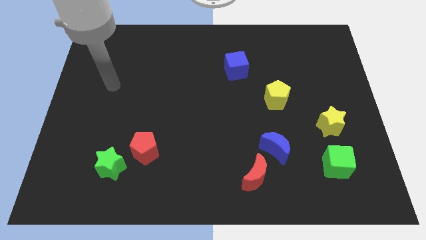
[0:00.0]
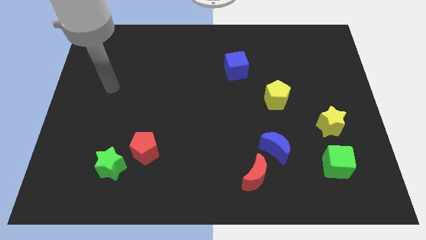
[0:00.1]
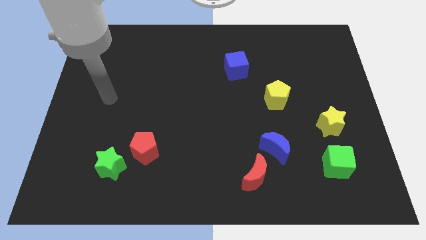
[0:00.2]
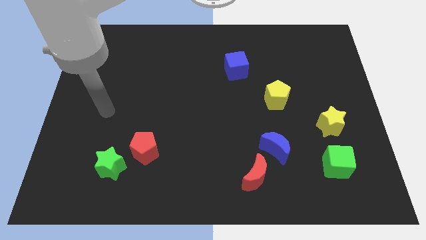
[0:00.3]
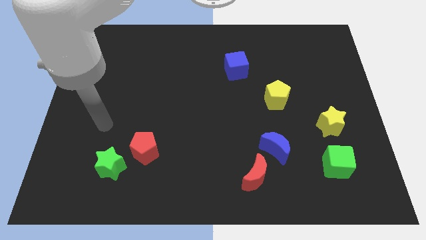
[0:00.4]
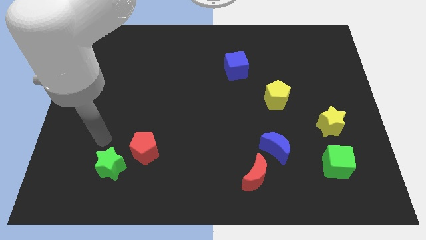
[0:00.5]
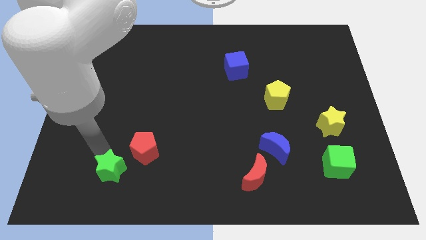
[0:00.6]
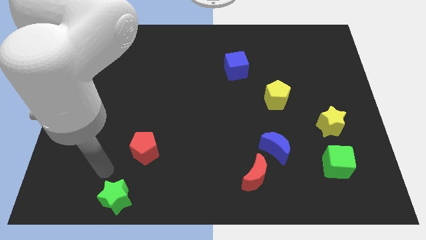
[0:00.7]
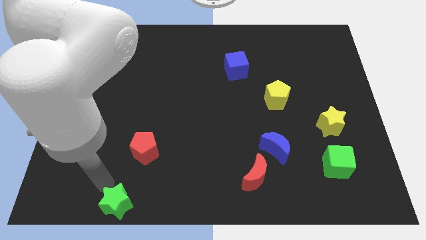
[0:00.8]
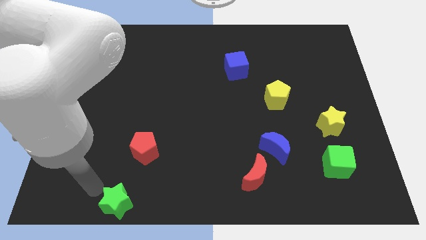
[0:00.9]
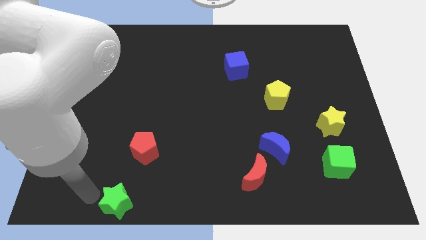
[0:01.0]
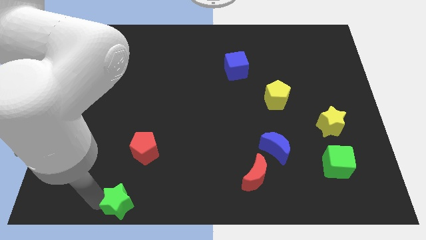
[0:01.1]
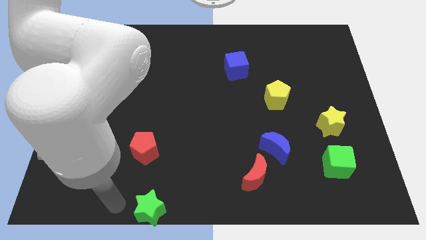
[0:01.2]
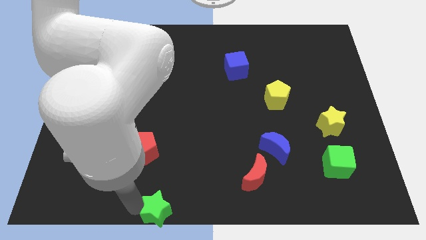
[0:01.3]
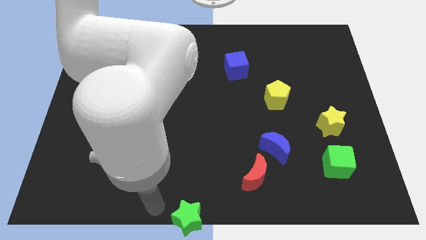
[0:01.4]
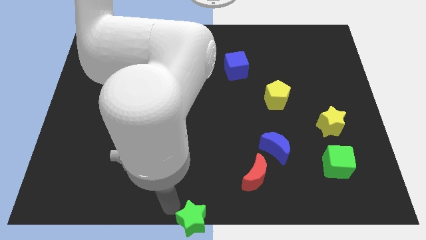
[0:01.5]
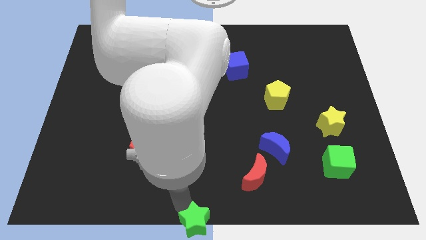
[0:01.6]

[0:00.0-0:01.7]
slide the green star towards bottom center

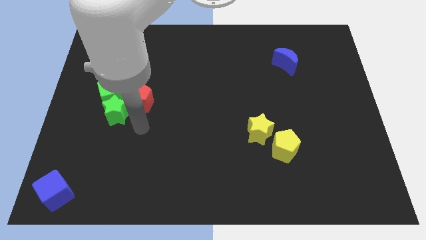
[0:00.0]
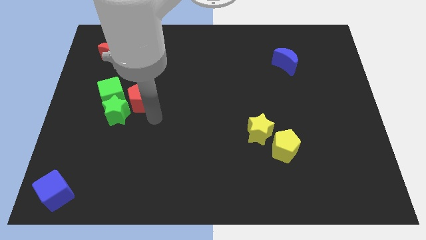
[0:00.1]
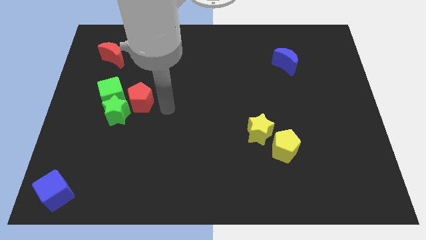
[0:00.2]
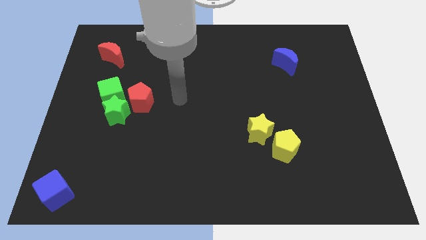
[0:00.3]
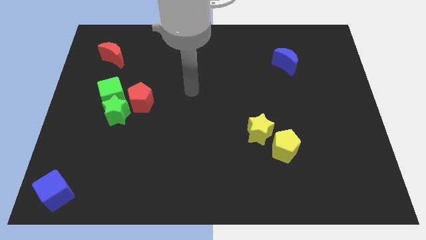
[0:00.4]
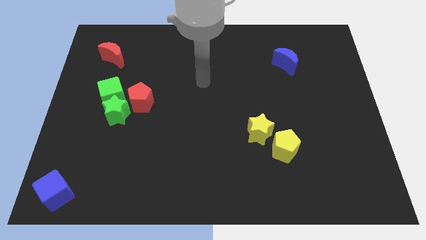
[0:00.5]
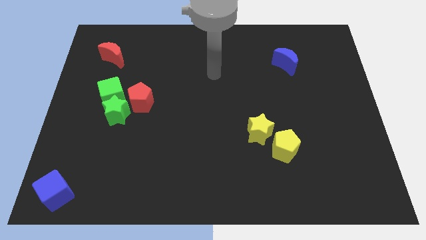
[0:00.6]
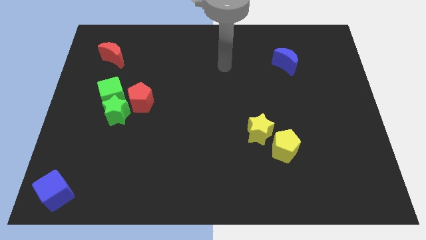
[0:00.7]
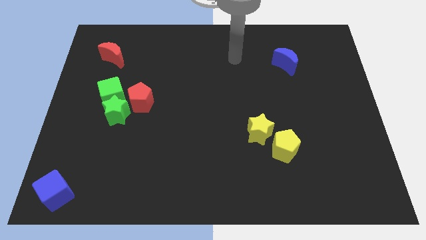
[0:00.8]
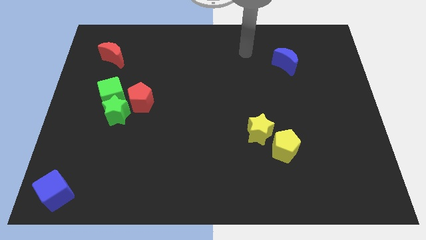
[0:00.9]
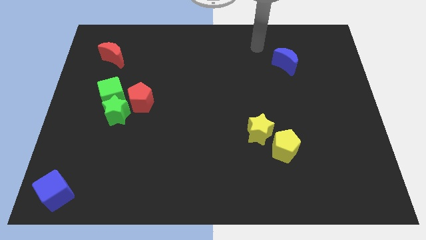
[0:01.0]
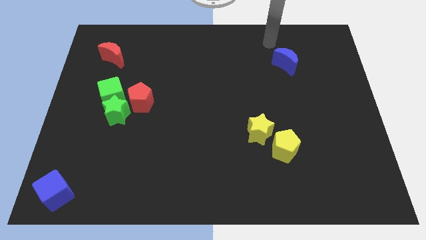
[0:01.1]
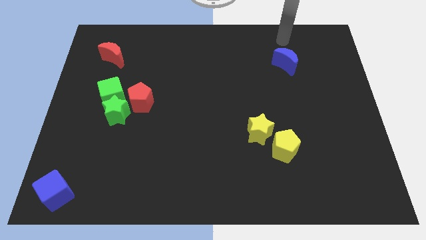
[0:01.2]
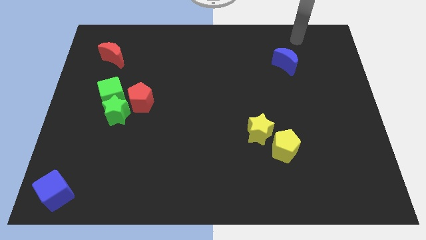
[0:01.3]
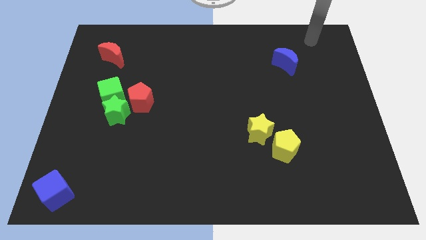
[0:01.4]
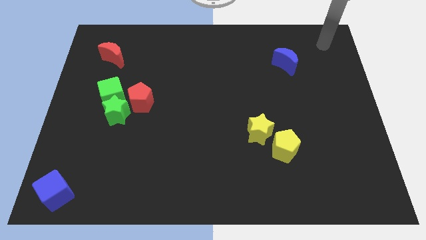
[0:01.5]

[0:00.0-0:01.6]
move your arm at the top right corner

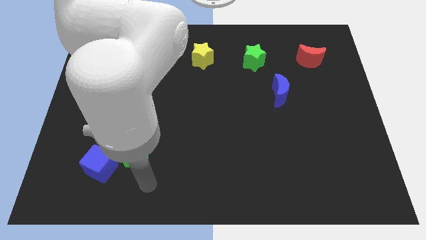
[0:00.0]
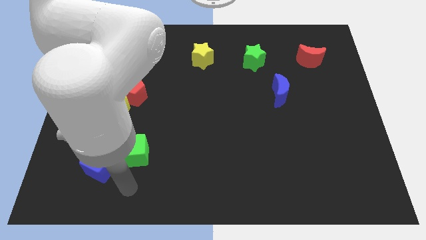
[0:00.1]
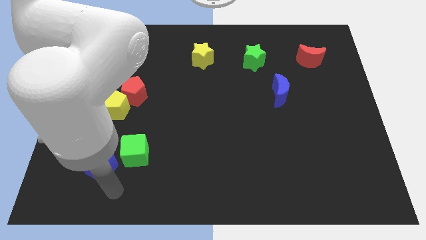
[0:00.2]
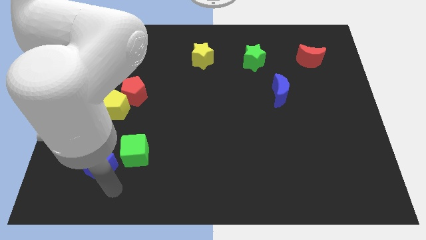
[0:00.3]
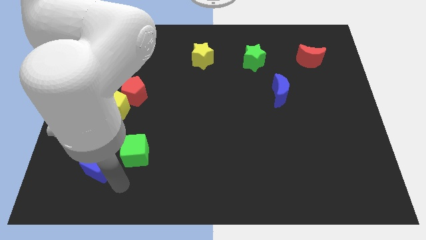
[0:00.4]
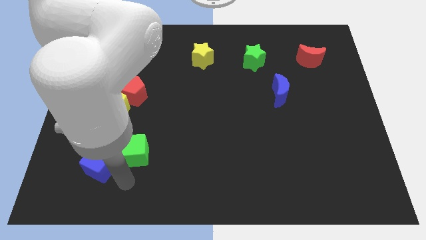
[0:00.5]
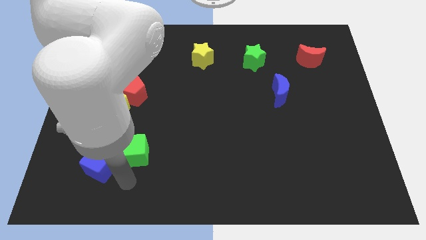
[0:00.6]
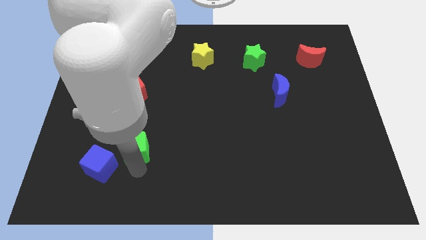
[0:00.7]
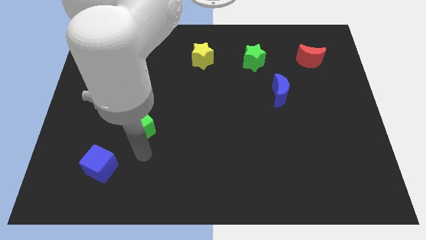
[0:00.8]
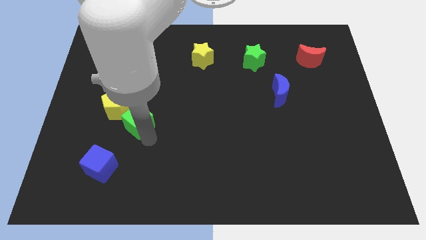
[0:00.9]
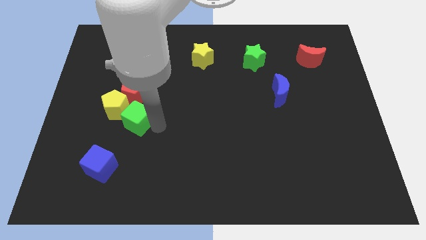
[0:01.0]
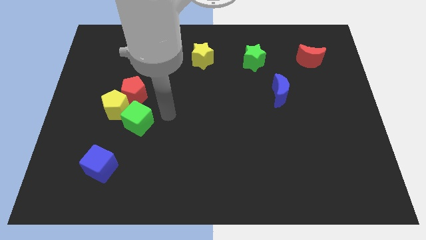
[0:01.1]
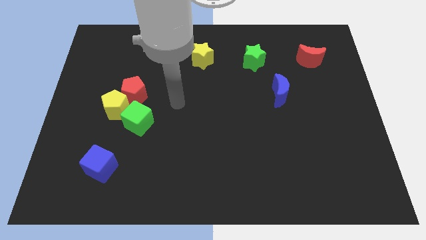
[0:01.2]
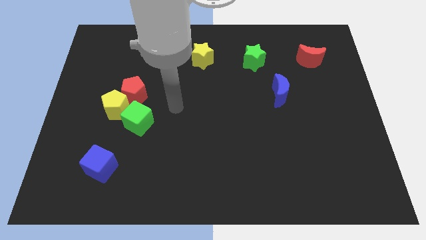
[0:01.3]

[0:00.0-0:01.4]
push the green cube into the yellow pentagon

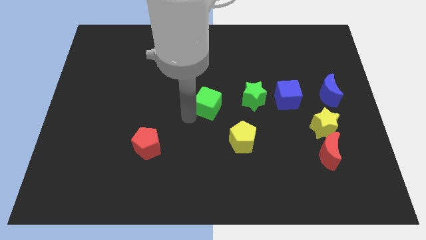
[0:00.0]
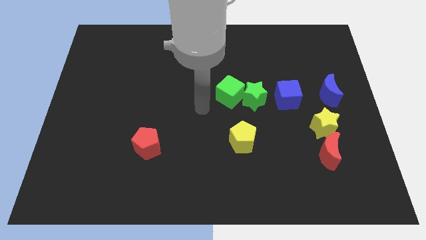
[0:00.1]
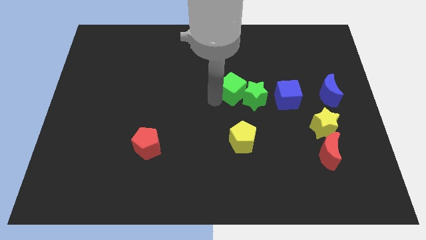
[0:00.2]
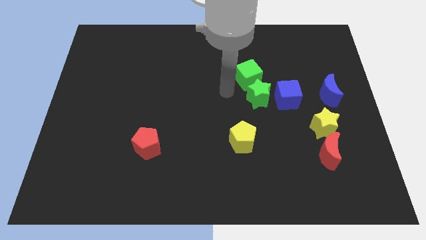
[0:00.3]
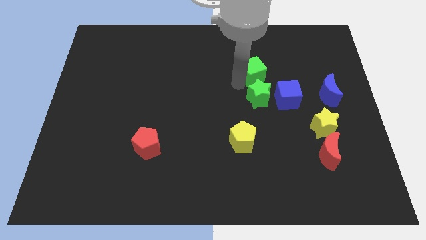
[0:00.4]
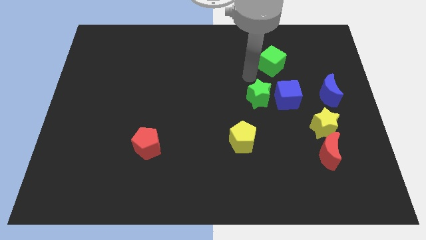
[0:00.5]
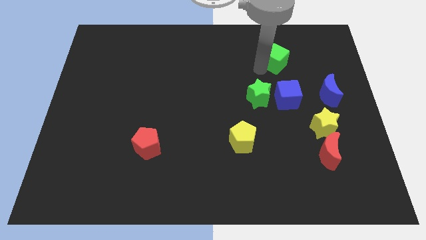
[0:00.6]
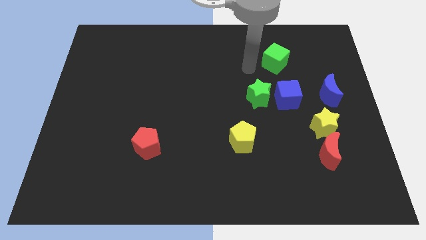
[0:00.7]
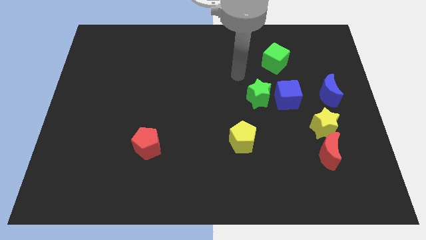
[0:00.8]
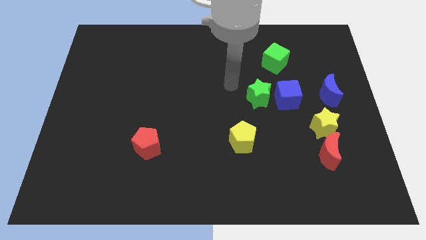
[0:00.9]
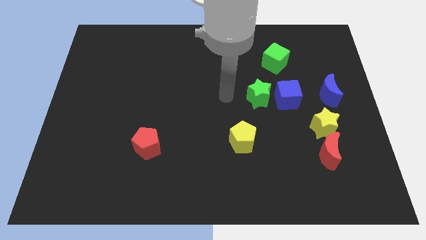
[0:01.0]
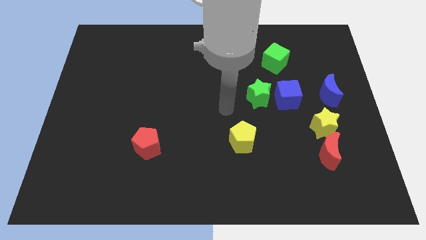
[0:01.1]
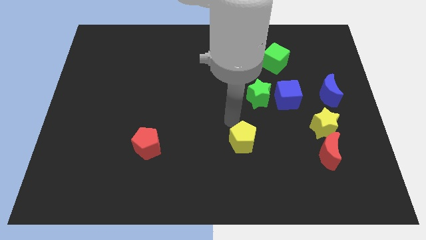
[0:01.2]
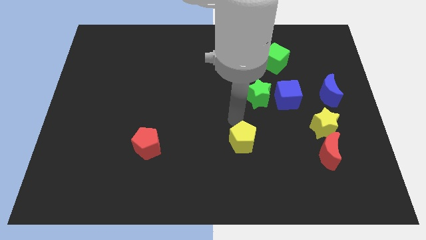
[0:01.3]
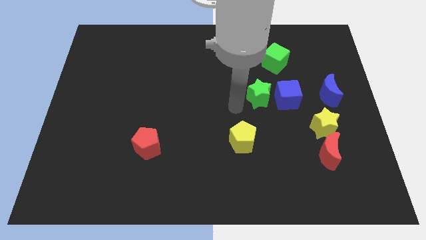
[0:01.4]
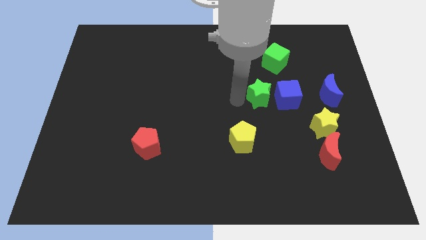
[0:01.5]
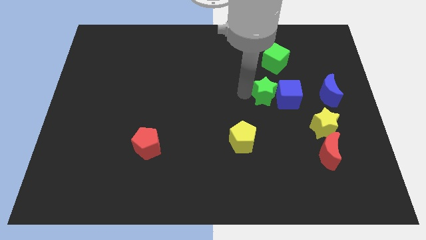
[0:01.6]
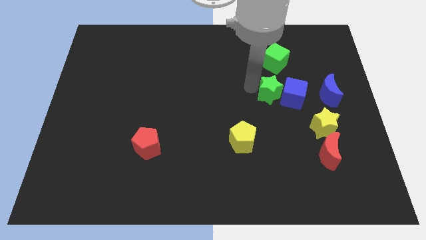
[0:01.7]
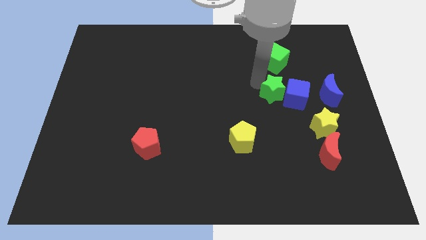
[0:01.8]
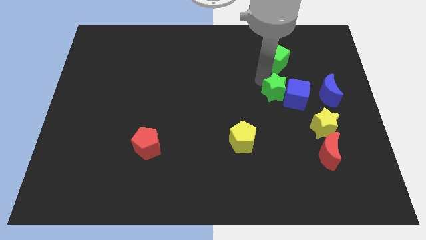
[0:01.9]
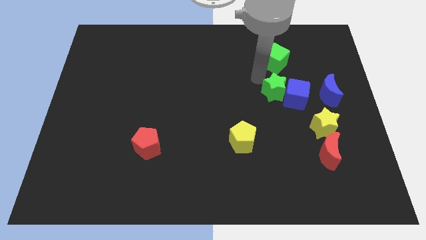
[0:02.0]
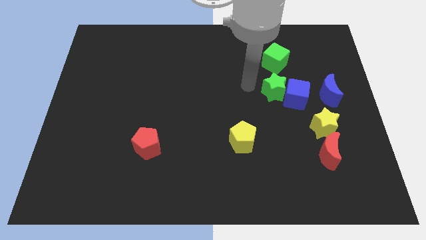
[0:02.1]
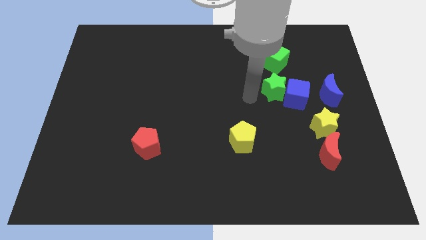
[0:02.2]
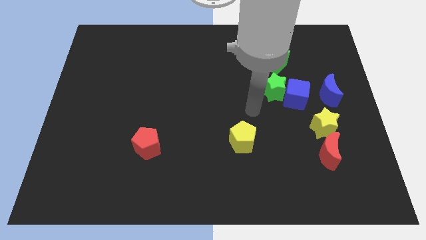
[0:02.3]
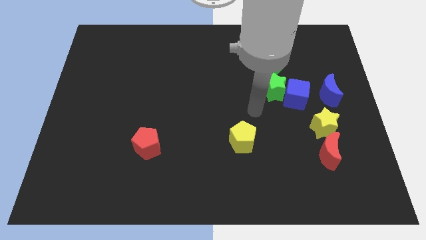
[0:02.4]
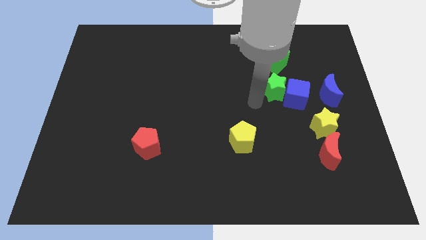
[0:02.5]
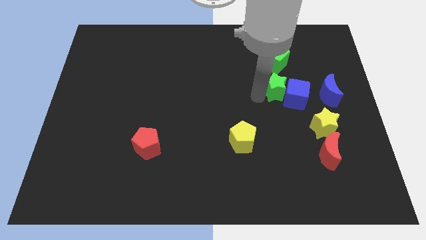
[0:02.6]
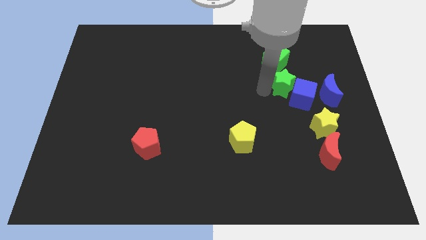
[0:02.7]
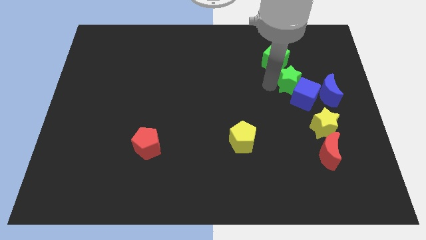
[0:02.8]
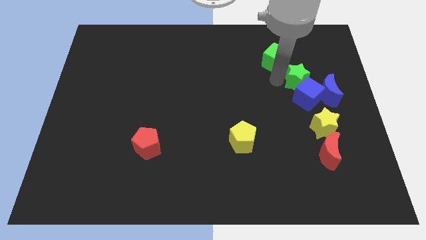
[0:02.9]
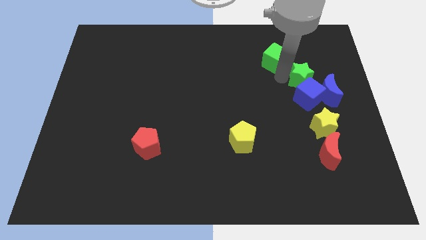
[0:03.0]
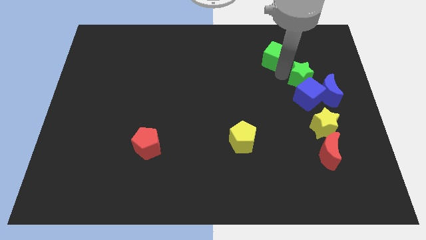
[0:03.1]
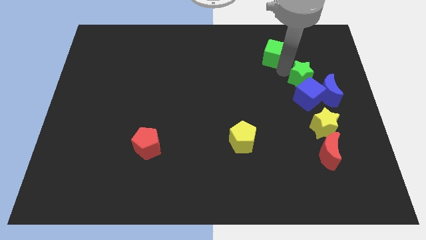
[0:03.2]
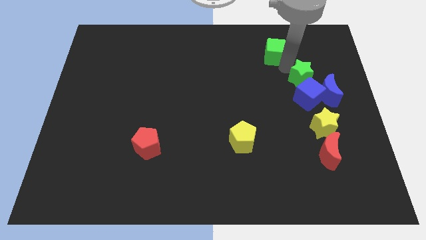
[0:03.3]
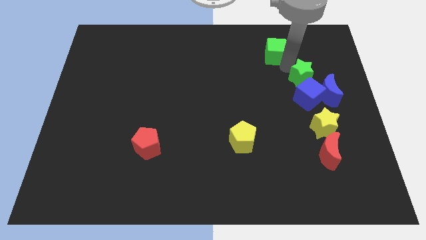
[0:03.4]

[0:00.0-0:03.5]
push the green cube and green star towards the top right side of the board

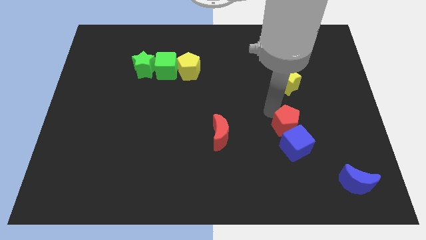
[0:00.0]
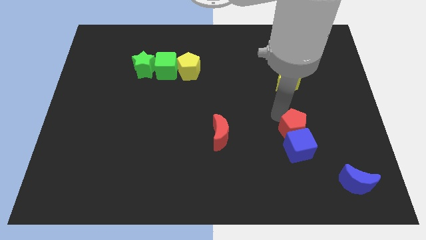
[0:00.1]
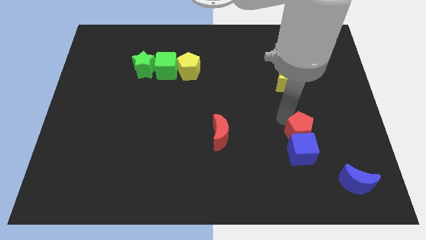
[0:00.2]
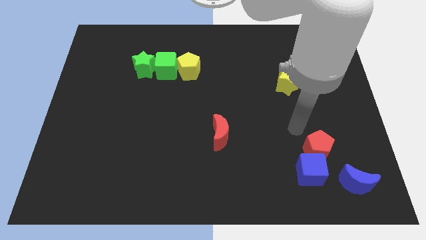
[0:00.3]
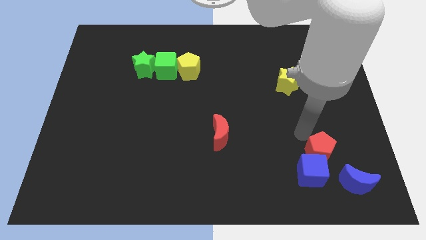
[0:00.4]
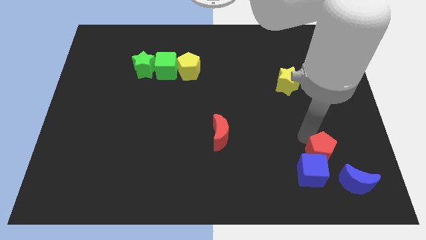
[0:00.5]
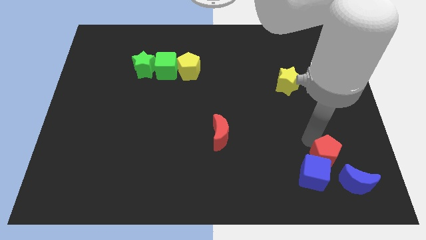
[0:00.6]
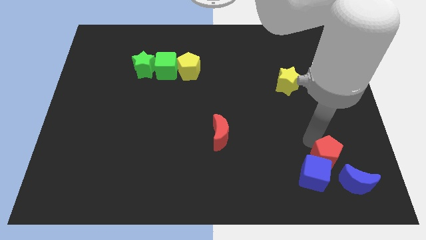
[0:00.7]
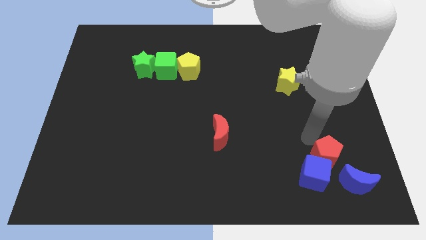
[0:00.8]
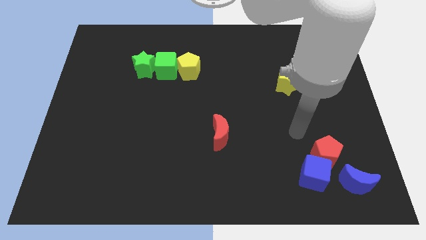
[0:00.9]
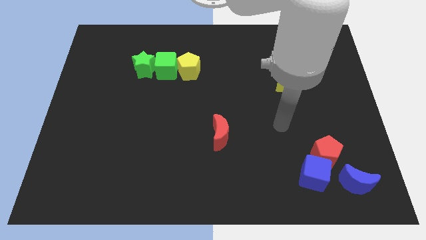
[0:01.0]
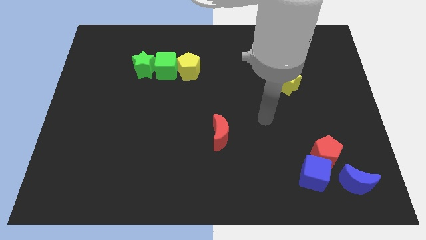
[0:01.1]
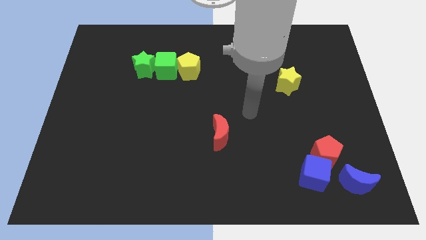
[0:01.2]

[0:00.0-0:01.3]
place the red pentagon and blue cube at the left side of the blue crescent
